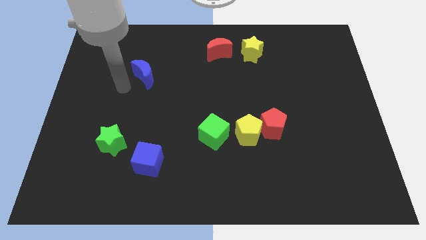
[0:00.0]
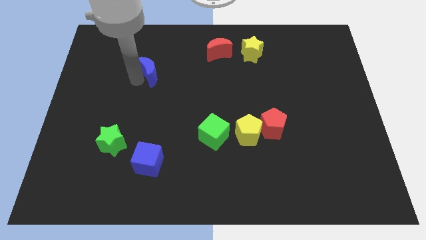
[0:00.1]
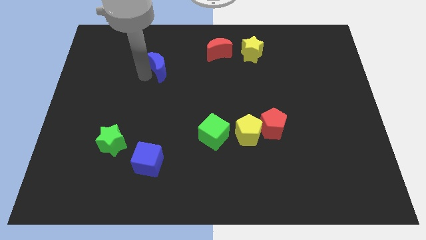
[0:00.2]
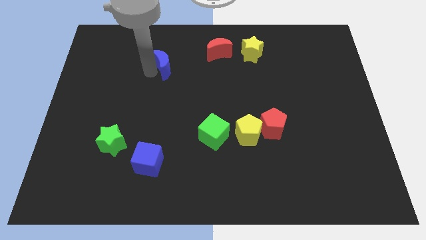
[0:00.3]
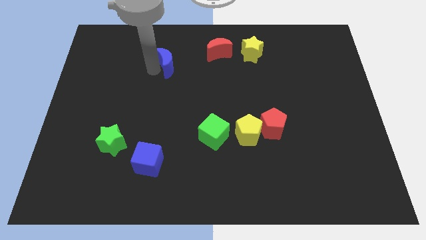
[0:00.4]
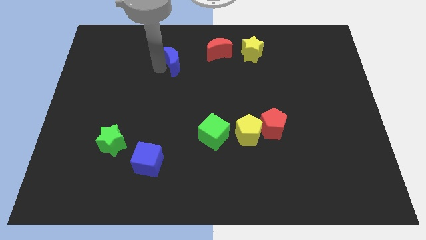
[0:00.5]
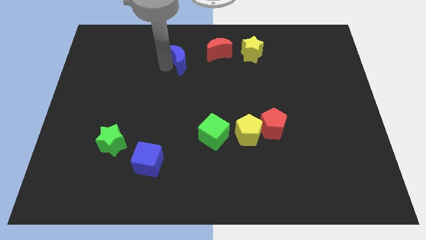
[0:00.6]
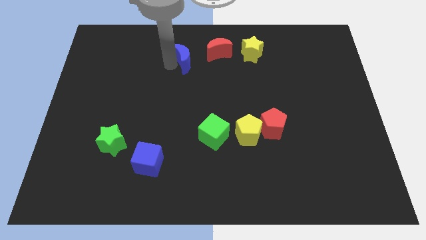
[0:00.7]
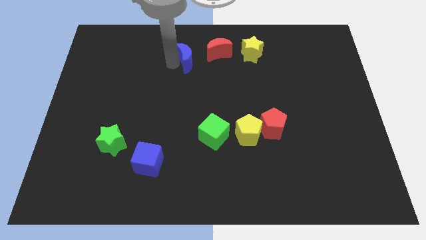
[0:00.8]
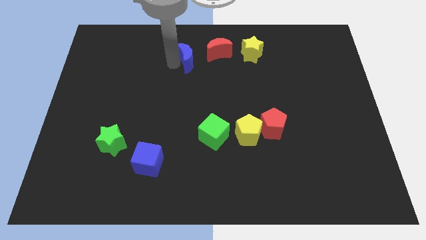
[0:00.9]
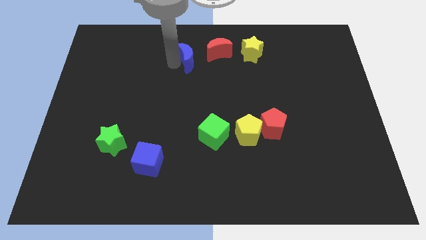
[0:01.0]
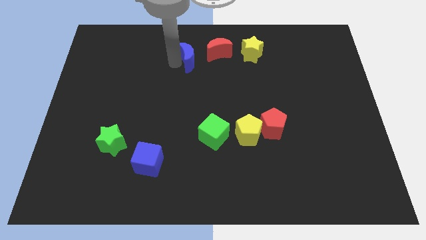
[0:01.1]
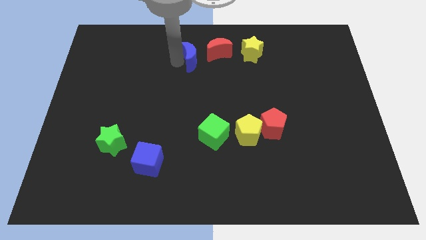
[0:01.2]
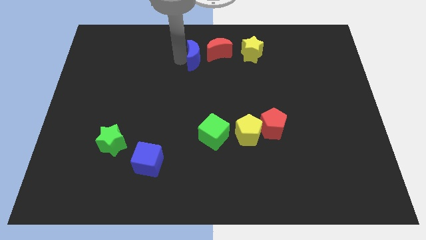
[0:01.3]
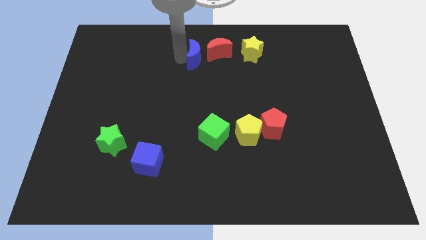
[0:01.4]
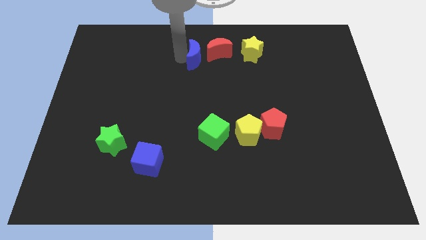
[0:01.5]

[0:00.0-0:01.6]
slide the blue crescent to the left side of the red crescent

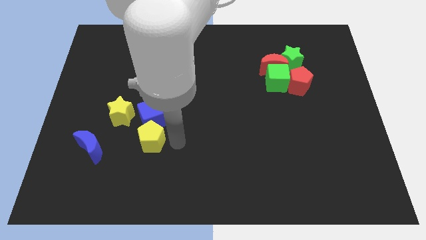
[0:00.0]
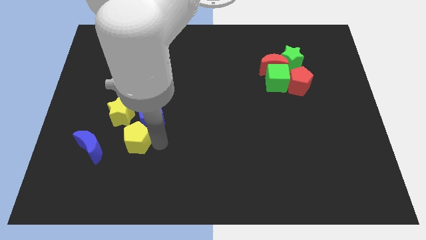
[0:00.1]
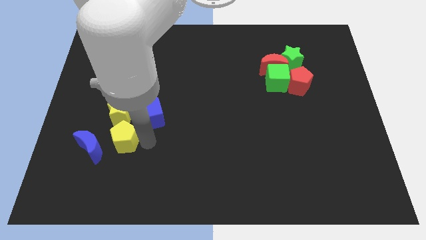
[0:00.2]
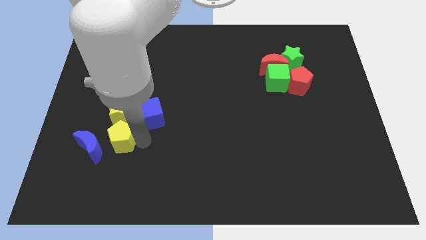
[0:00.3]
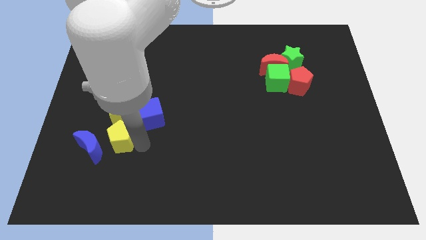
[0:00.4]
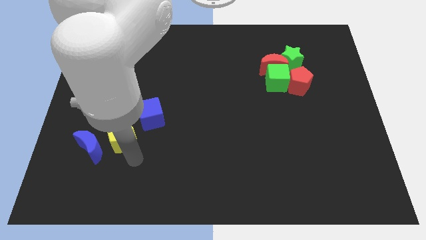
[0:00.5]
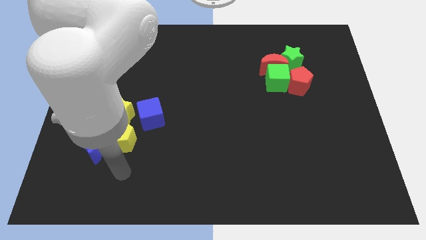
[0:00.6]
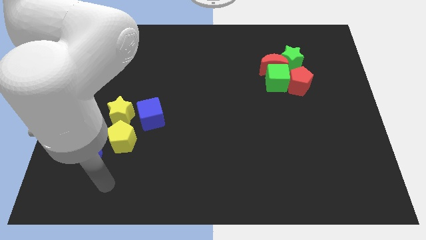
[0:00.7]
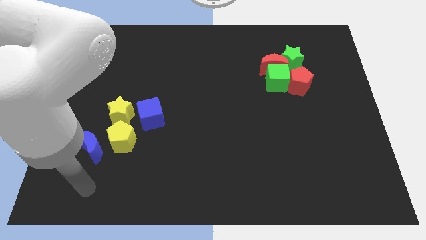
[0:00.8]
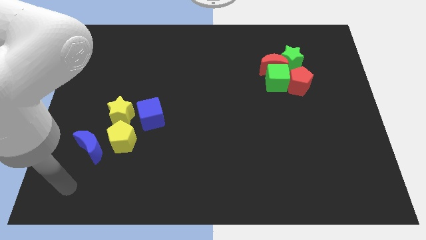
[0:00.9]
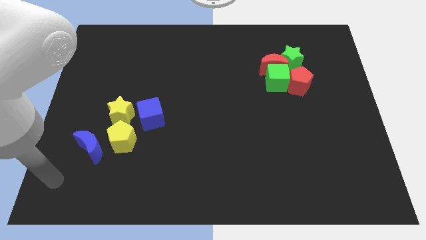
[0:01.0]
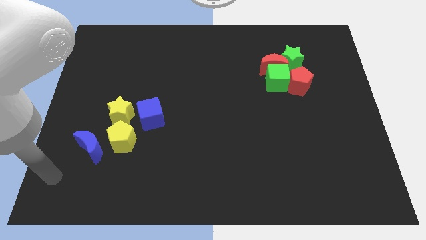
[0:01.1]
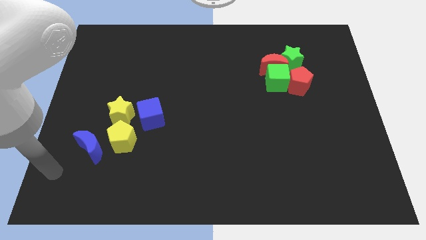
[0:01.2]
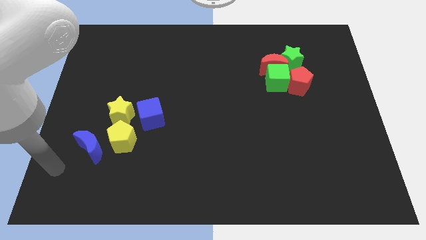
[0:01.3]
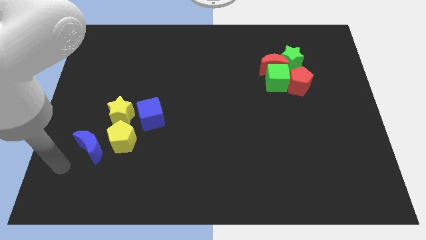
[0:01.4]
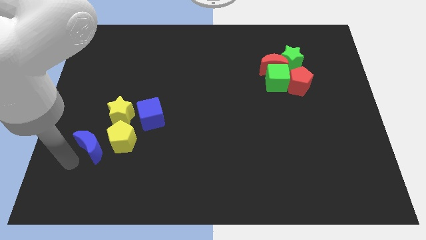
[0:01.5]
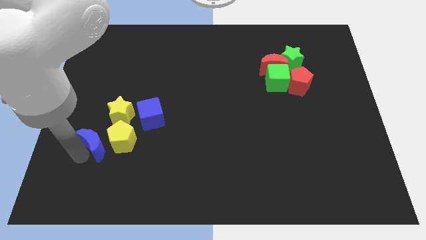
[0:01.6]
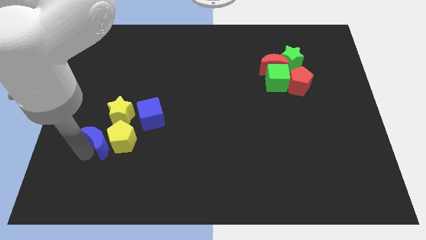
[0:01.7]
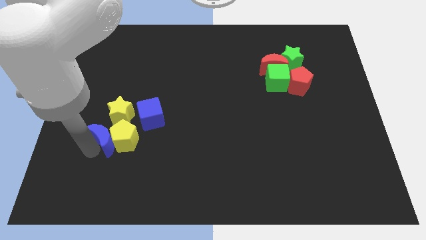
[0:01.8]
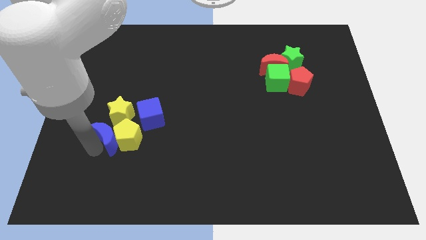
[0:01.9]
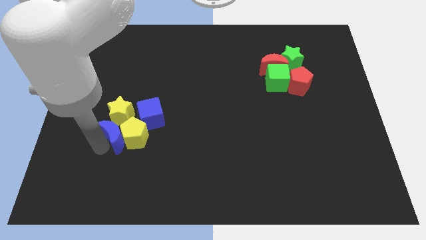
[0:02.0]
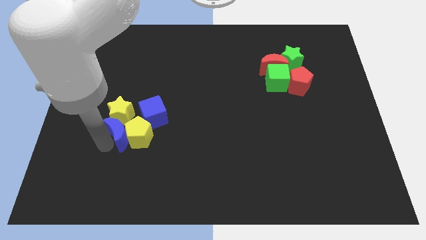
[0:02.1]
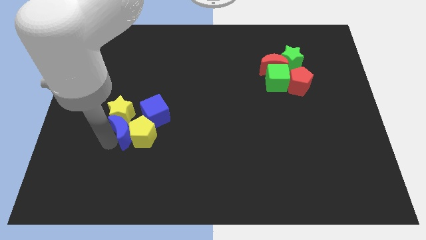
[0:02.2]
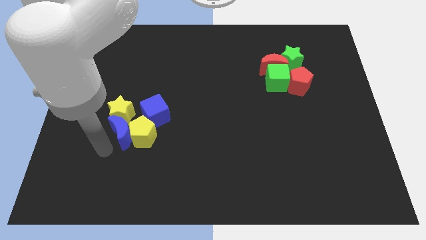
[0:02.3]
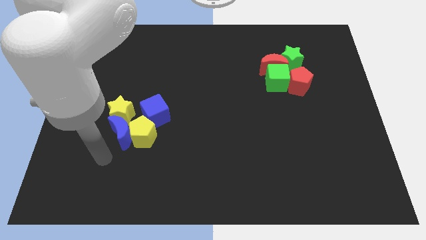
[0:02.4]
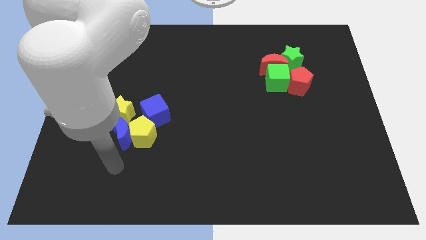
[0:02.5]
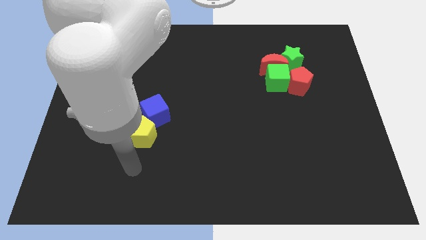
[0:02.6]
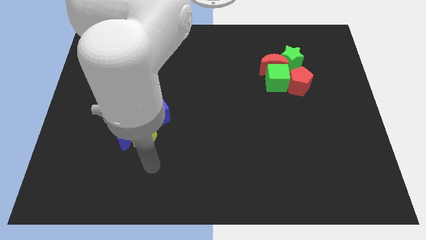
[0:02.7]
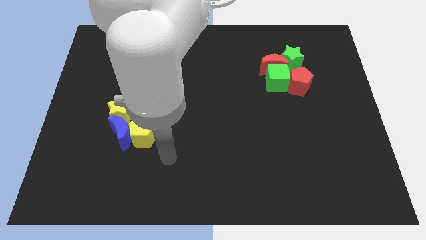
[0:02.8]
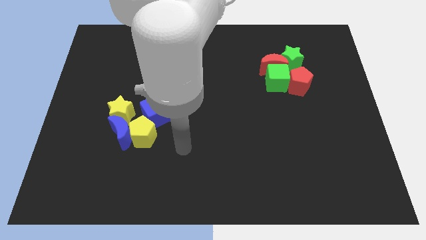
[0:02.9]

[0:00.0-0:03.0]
place the blue crescent close to yellow blocks

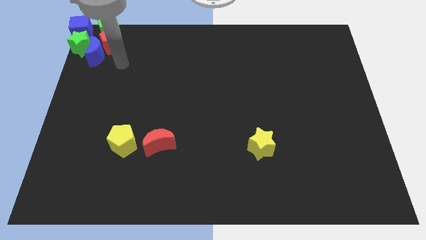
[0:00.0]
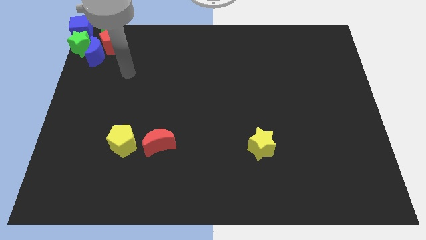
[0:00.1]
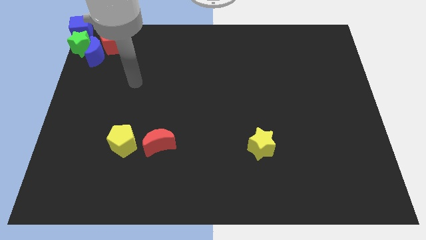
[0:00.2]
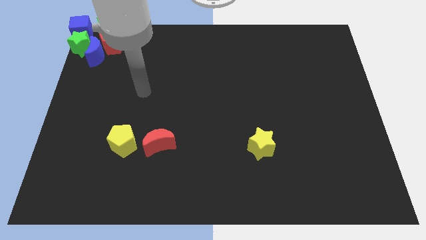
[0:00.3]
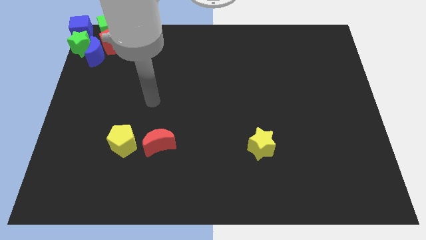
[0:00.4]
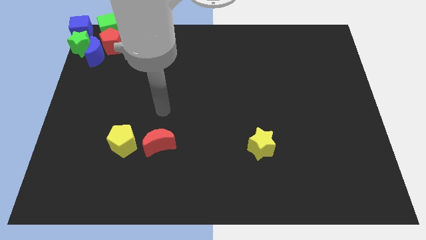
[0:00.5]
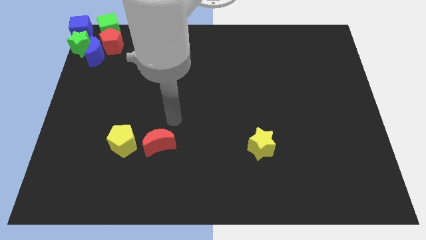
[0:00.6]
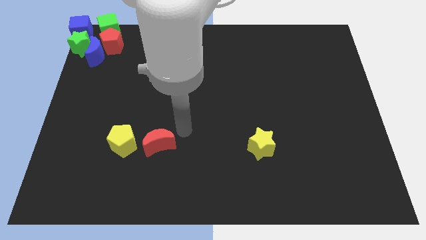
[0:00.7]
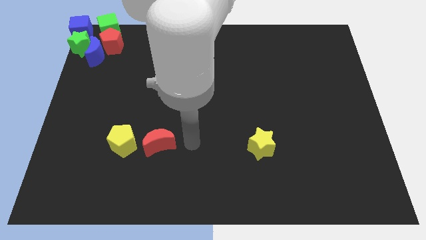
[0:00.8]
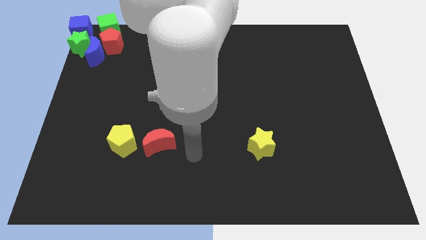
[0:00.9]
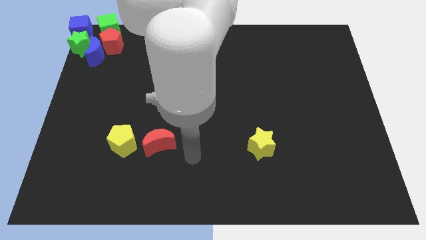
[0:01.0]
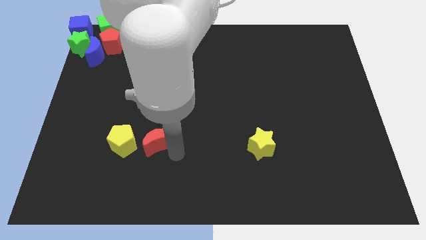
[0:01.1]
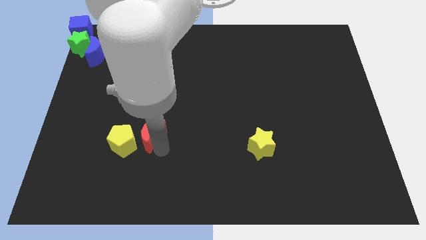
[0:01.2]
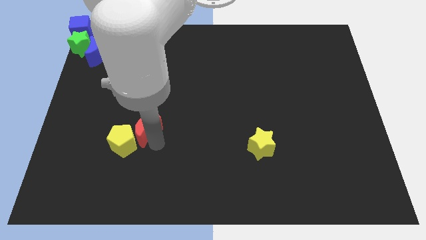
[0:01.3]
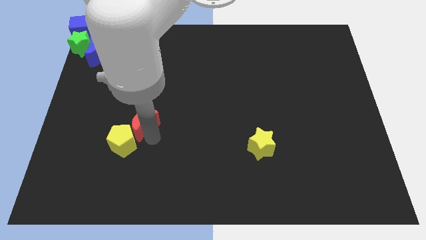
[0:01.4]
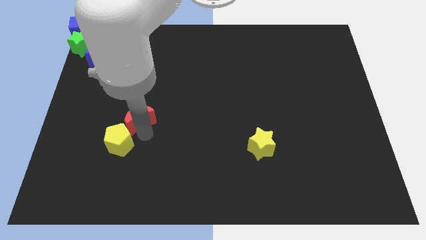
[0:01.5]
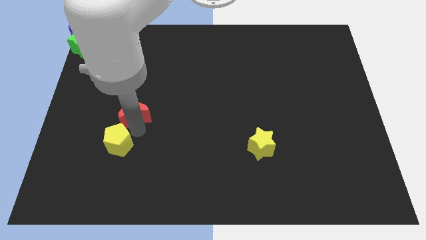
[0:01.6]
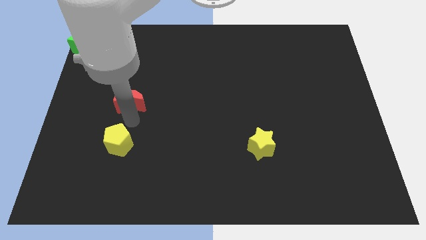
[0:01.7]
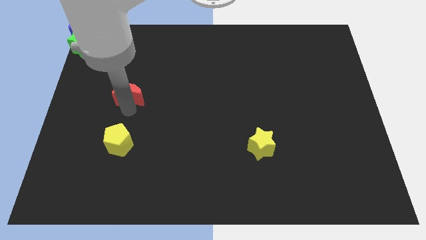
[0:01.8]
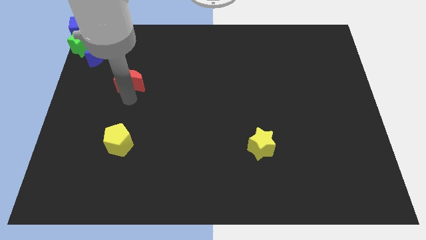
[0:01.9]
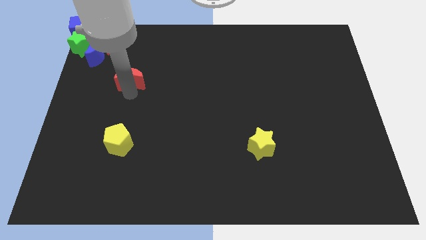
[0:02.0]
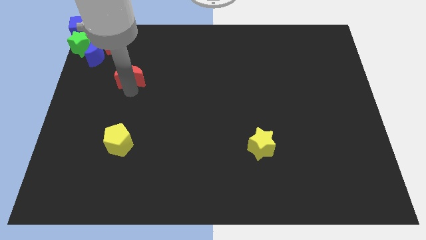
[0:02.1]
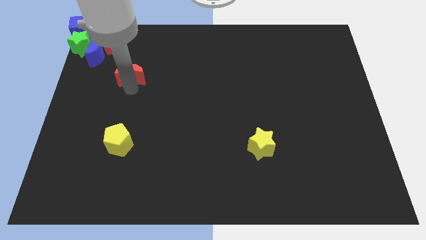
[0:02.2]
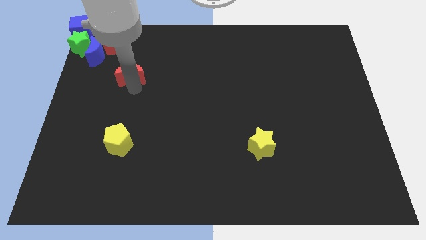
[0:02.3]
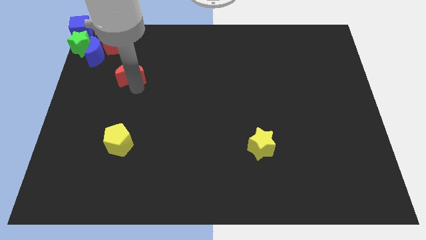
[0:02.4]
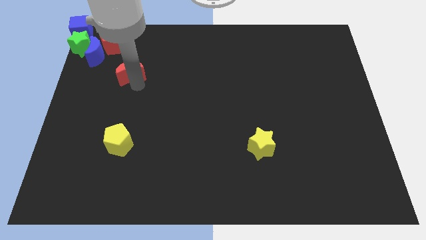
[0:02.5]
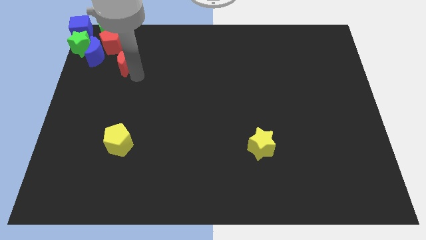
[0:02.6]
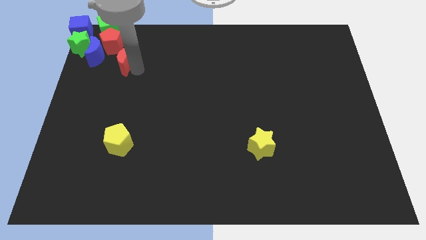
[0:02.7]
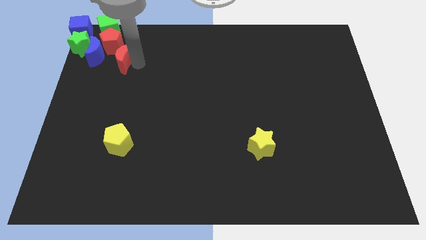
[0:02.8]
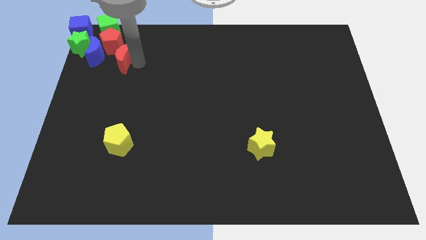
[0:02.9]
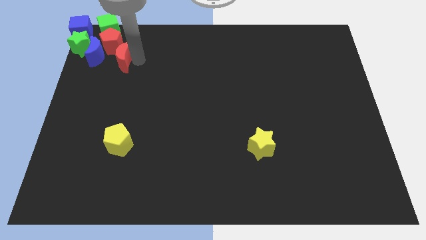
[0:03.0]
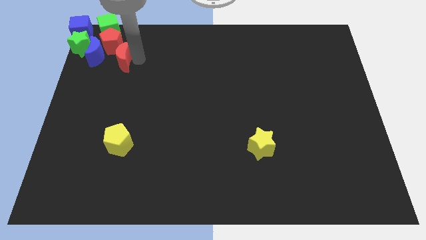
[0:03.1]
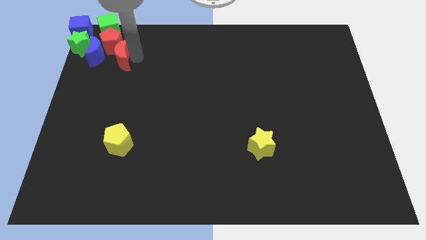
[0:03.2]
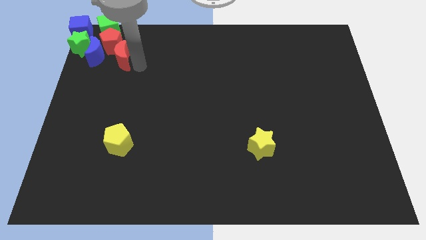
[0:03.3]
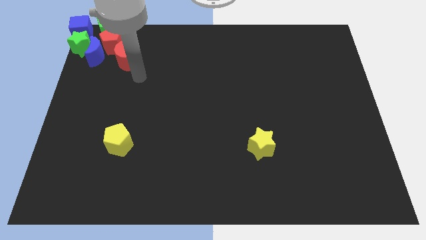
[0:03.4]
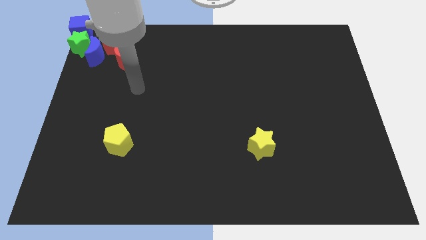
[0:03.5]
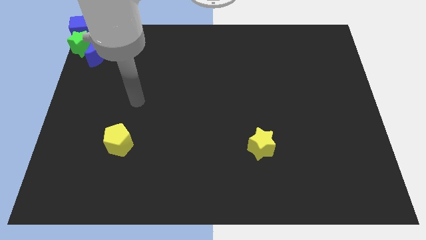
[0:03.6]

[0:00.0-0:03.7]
move the red moon diagonally bottom right to red pentagon

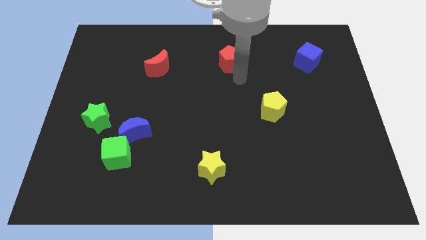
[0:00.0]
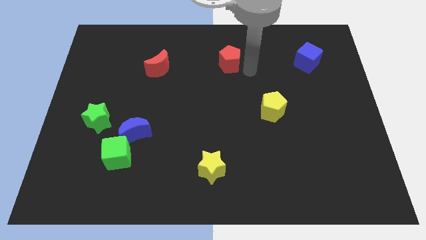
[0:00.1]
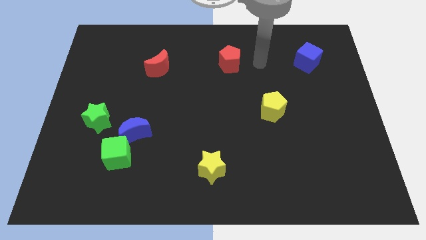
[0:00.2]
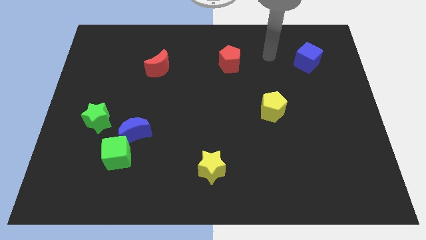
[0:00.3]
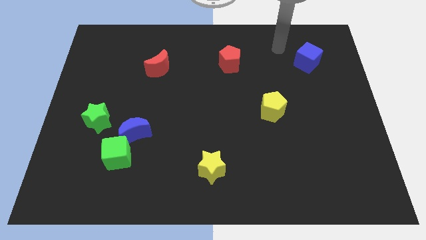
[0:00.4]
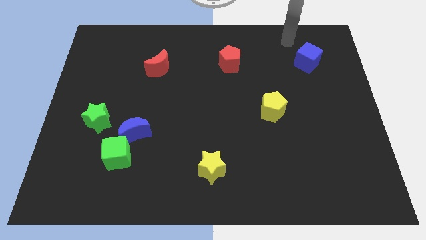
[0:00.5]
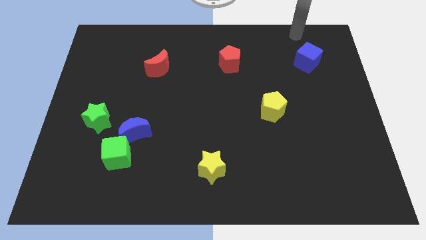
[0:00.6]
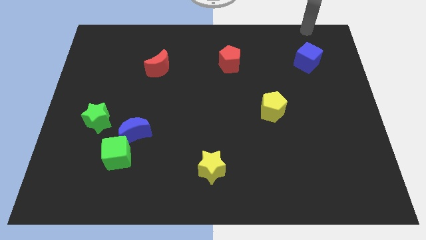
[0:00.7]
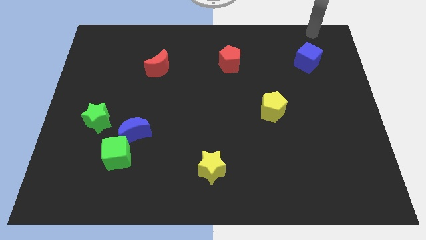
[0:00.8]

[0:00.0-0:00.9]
place your arm at the top of the blue cube
